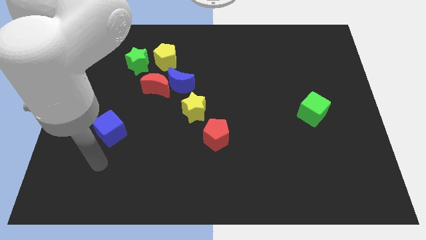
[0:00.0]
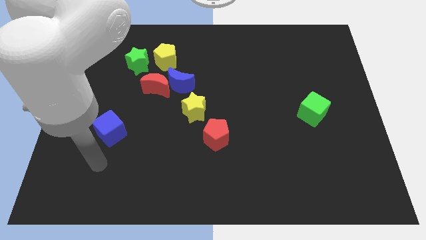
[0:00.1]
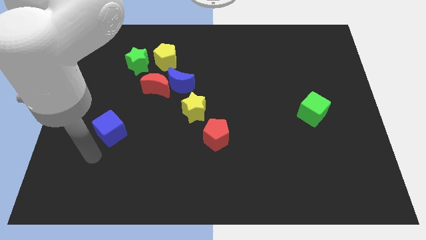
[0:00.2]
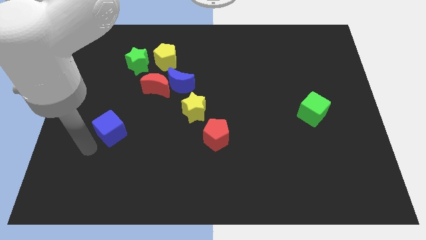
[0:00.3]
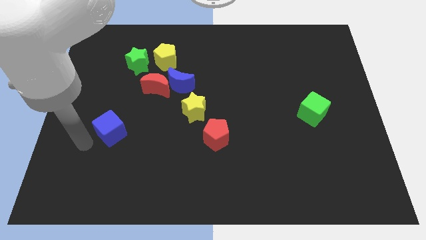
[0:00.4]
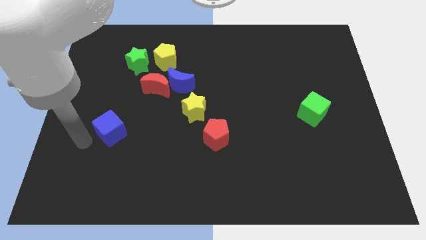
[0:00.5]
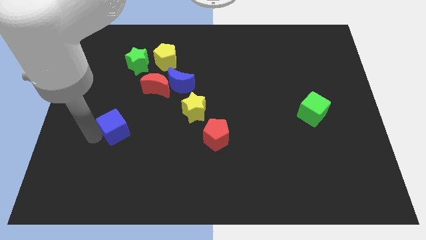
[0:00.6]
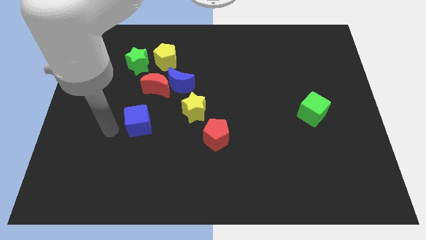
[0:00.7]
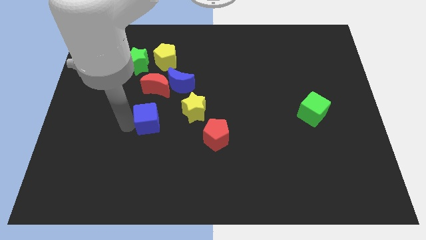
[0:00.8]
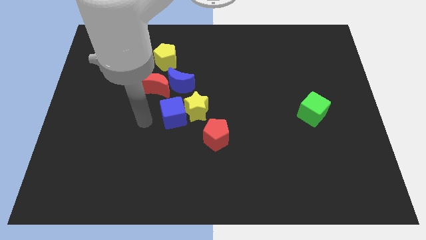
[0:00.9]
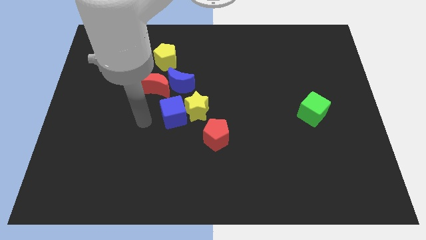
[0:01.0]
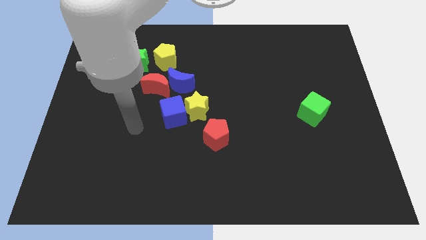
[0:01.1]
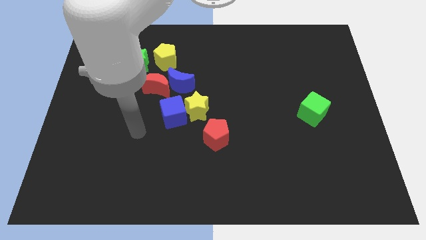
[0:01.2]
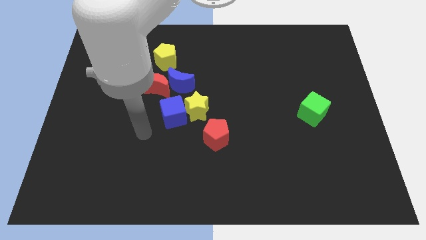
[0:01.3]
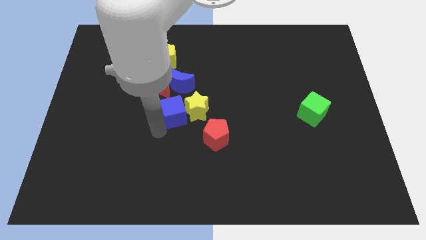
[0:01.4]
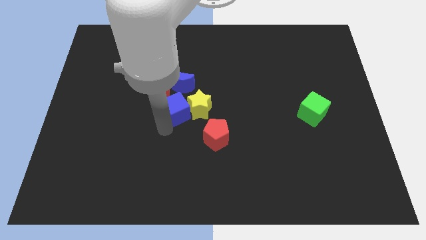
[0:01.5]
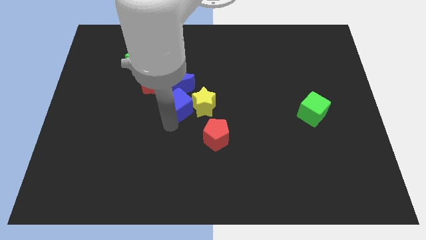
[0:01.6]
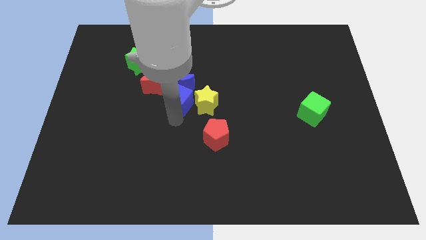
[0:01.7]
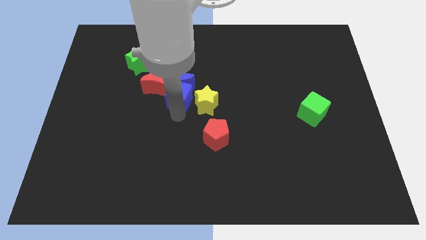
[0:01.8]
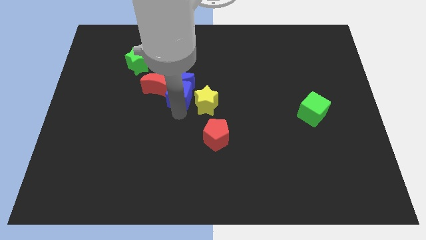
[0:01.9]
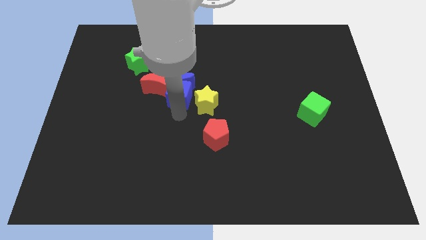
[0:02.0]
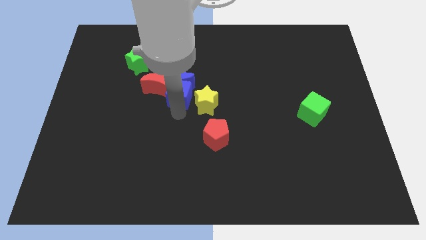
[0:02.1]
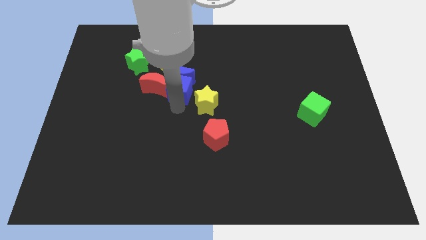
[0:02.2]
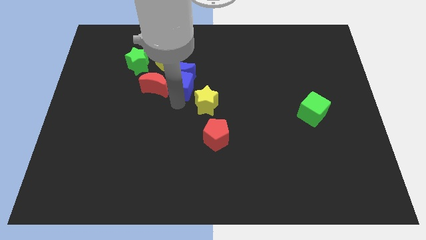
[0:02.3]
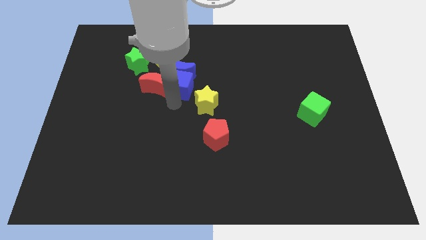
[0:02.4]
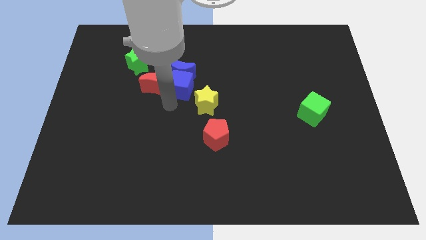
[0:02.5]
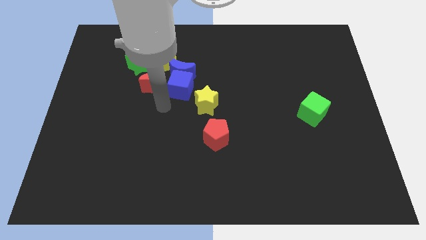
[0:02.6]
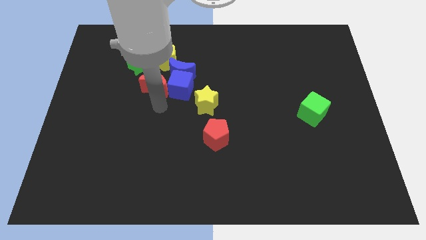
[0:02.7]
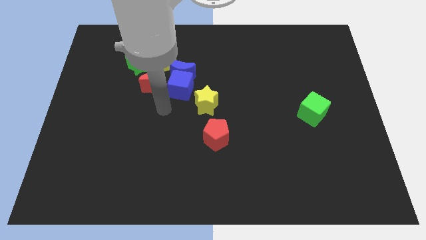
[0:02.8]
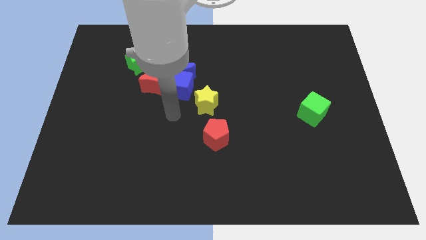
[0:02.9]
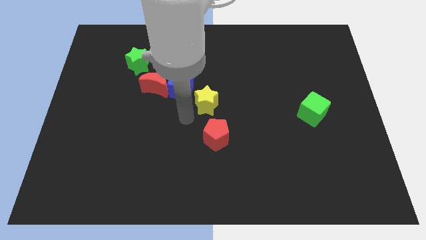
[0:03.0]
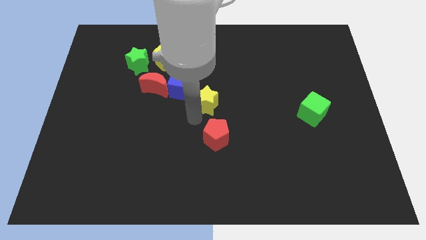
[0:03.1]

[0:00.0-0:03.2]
push the blue cube into the bottom side of the blue crescent

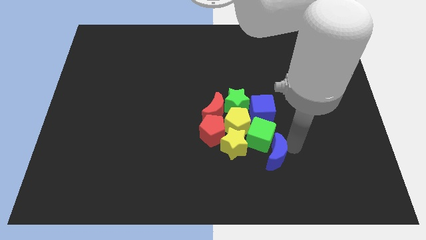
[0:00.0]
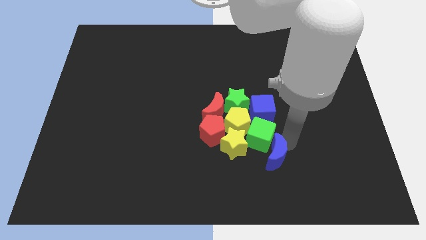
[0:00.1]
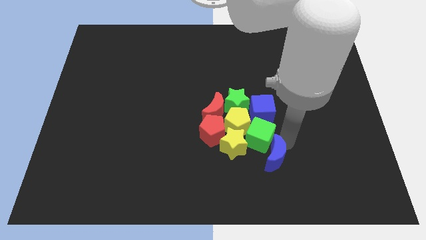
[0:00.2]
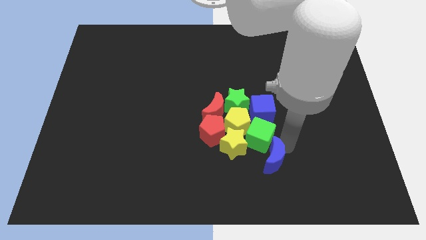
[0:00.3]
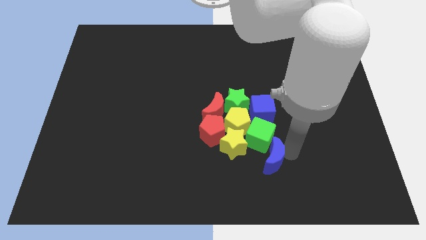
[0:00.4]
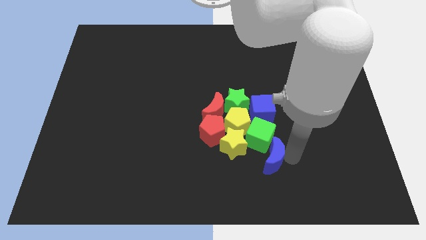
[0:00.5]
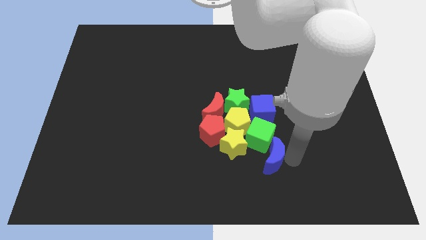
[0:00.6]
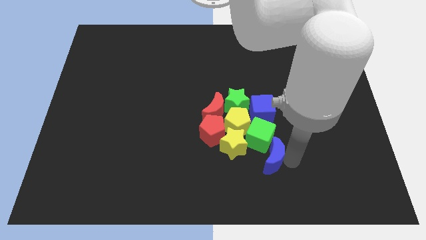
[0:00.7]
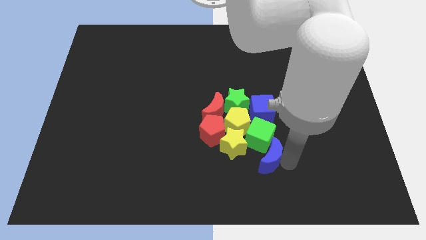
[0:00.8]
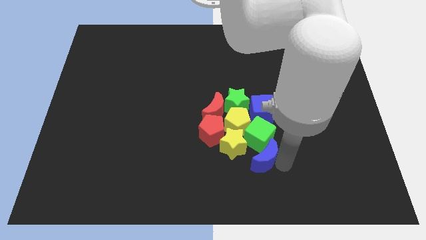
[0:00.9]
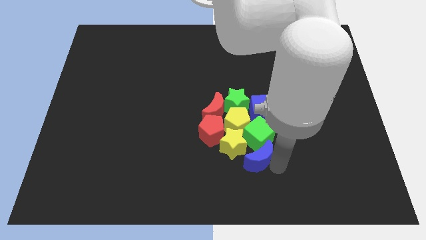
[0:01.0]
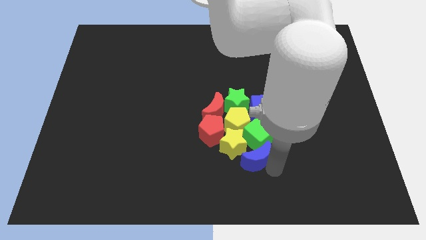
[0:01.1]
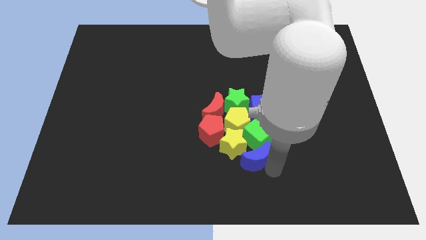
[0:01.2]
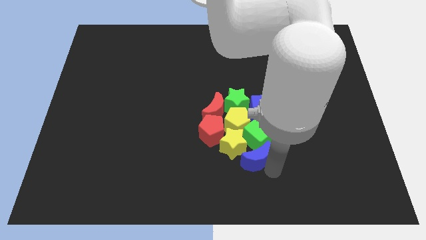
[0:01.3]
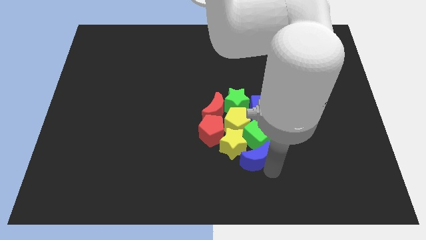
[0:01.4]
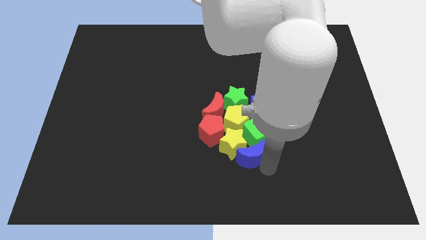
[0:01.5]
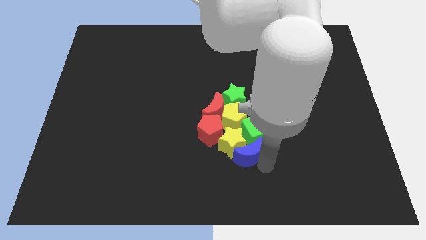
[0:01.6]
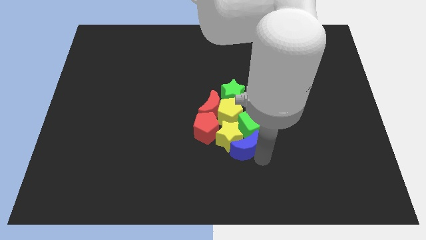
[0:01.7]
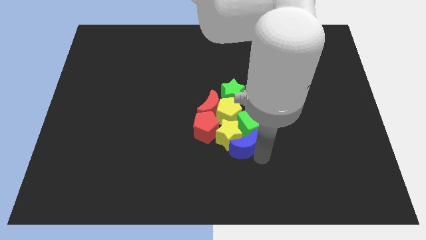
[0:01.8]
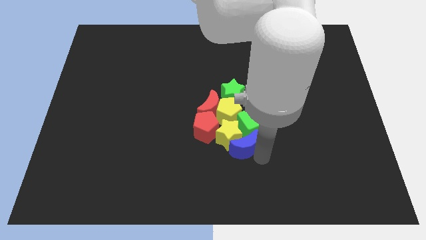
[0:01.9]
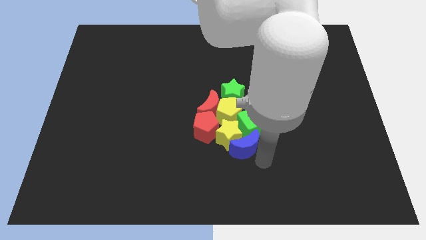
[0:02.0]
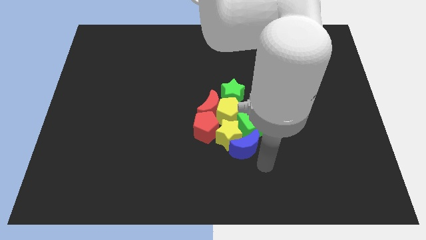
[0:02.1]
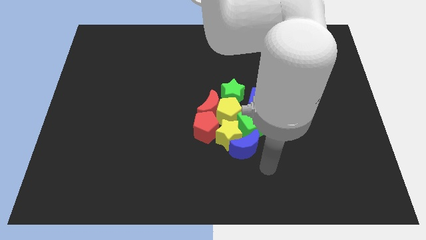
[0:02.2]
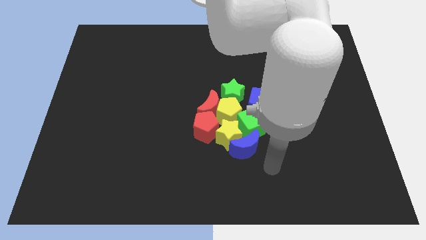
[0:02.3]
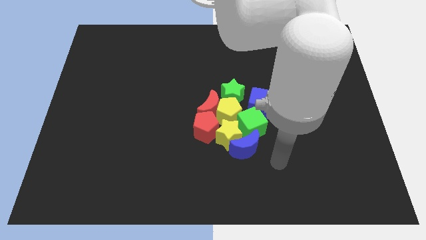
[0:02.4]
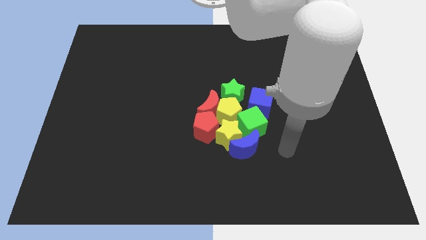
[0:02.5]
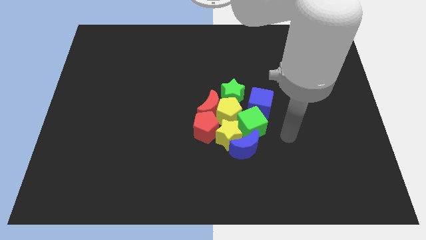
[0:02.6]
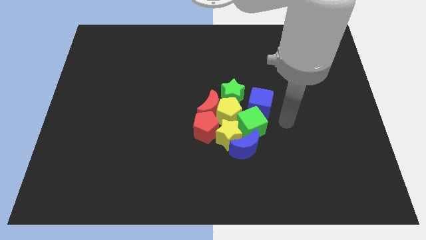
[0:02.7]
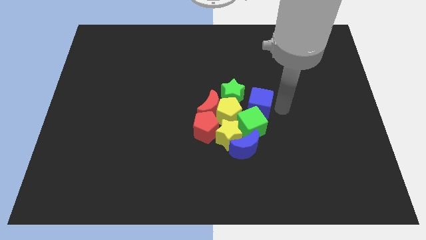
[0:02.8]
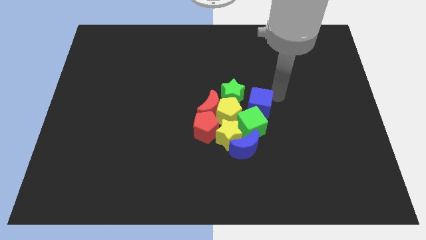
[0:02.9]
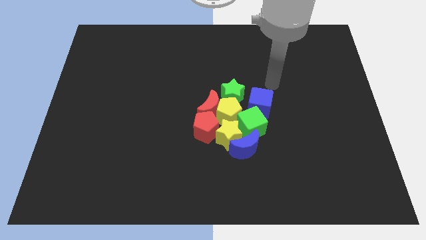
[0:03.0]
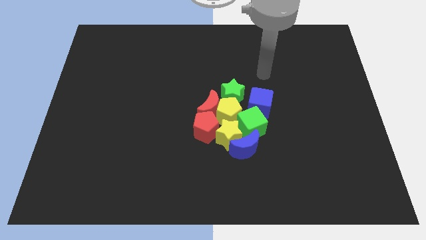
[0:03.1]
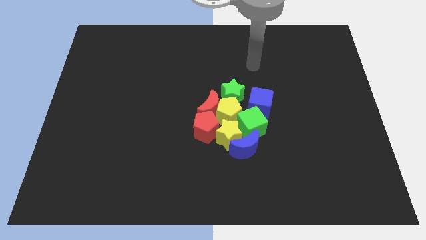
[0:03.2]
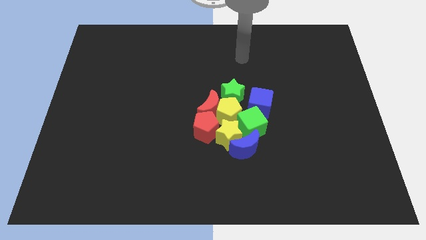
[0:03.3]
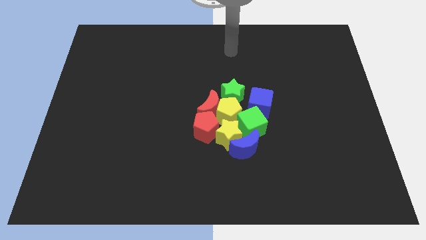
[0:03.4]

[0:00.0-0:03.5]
place the group of blocks at the center of the board

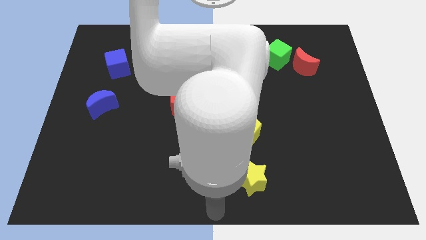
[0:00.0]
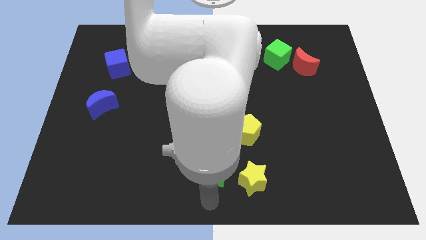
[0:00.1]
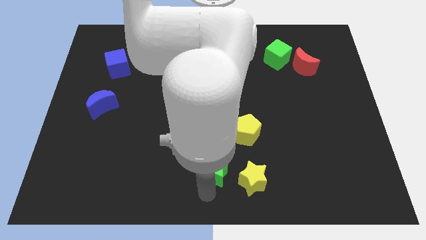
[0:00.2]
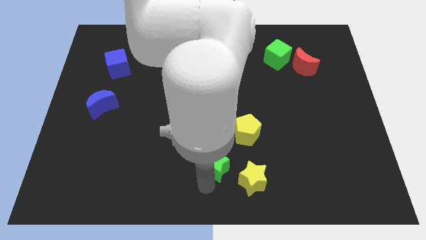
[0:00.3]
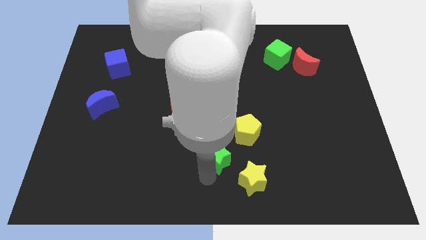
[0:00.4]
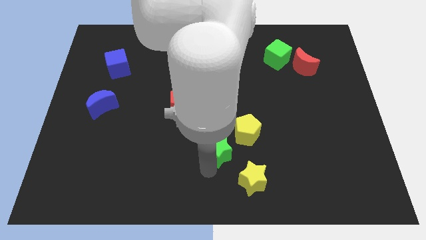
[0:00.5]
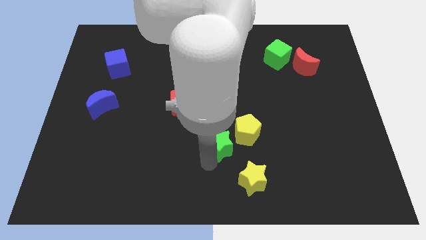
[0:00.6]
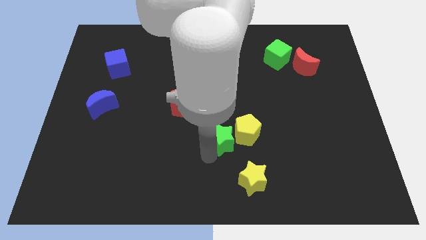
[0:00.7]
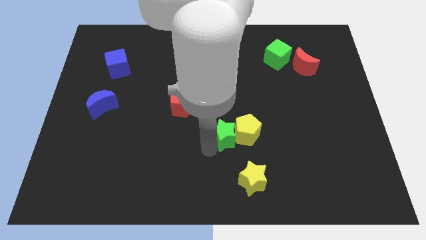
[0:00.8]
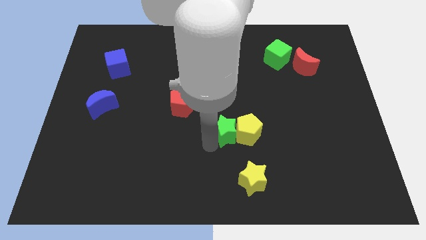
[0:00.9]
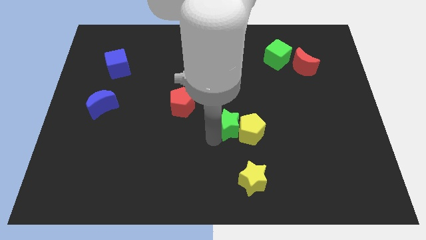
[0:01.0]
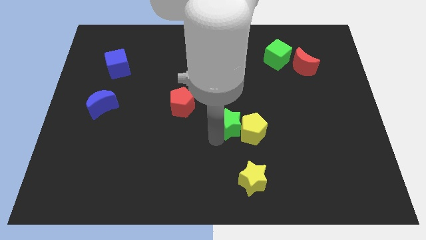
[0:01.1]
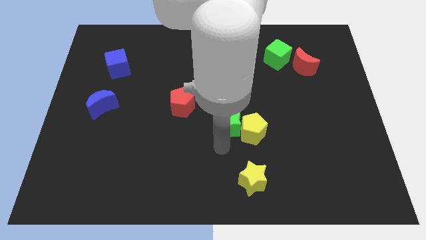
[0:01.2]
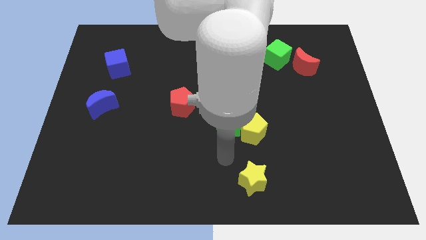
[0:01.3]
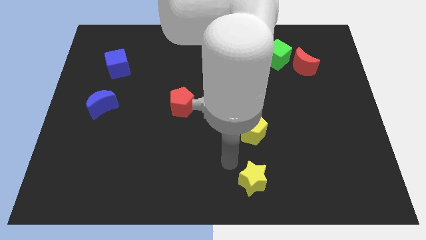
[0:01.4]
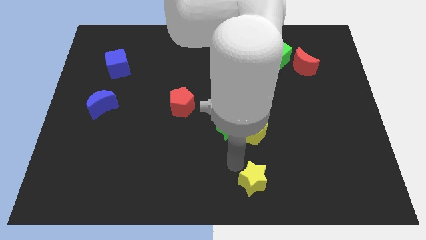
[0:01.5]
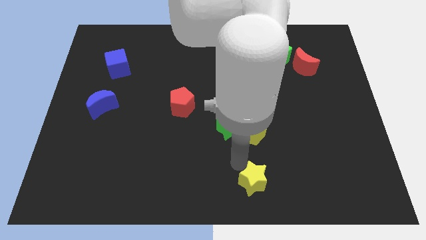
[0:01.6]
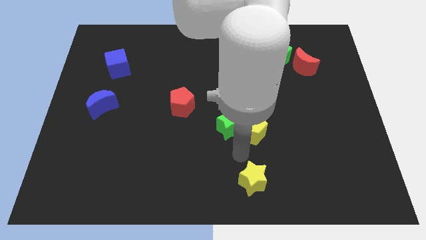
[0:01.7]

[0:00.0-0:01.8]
place the green star left to the yellow pentagon

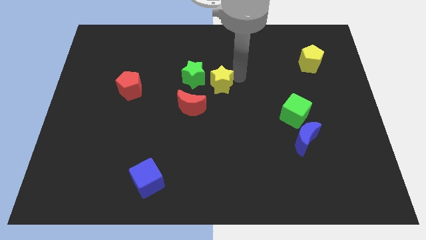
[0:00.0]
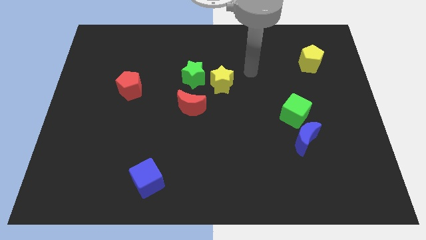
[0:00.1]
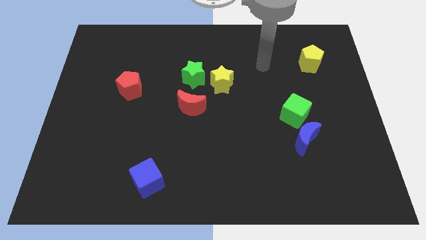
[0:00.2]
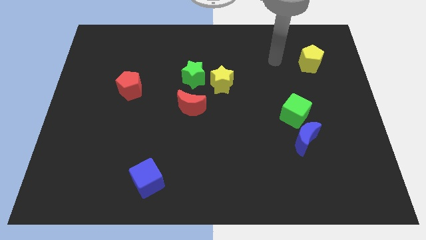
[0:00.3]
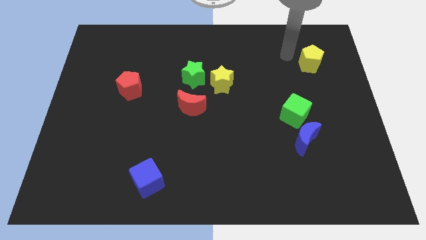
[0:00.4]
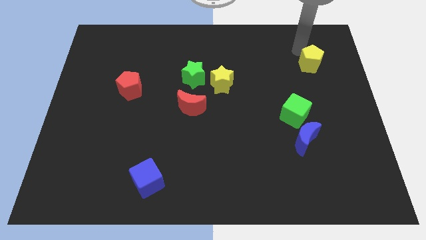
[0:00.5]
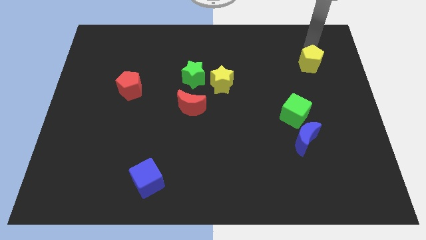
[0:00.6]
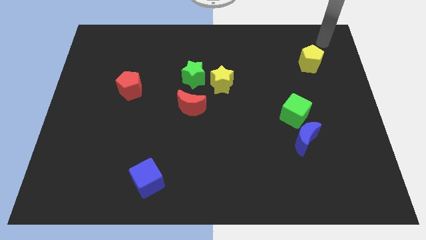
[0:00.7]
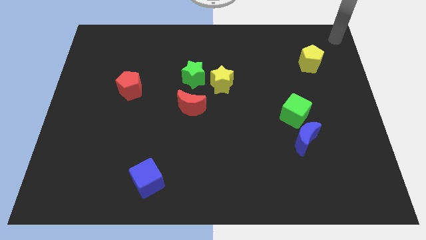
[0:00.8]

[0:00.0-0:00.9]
point your arm at the top right corner of the board
